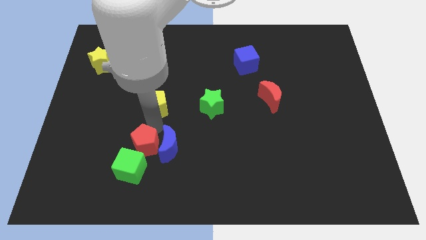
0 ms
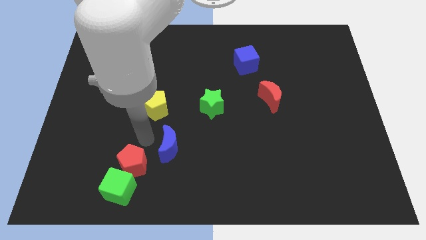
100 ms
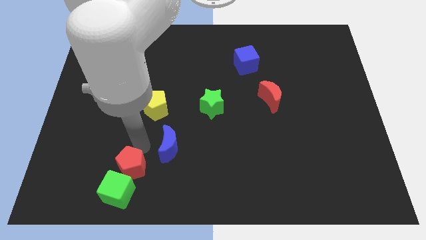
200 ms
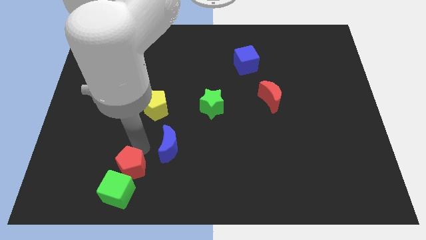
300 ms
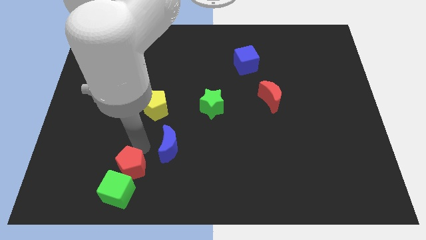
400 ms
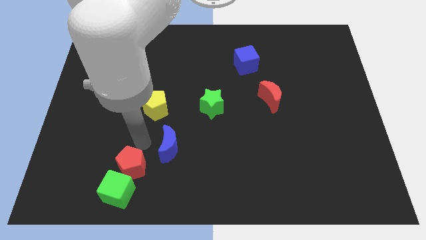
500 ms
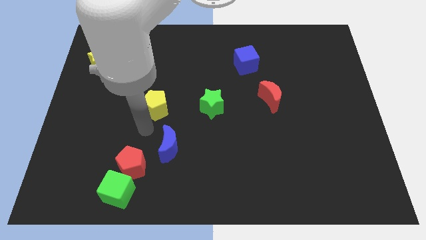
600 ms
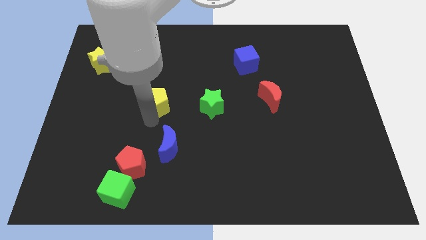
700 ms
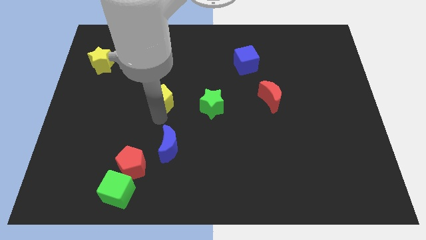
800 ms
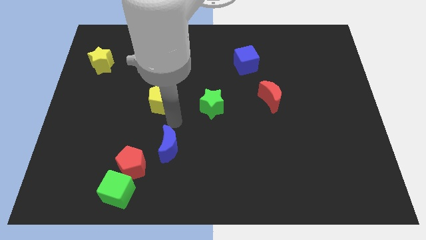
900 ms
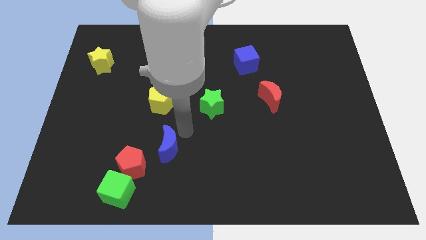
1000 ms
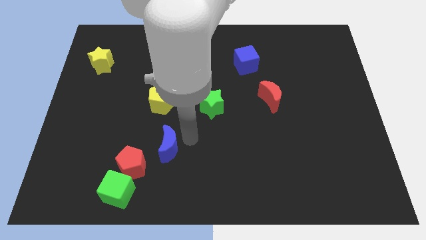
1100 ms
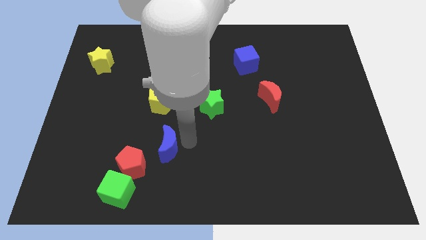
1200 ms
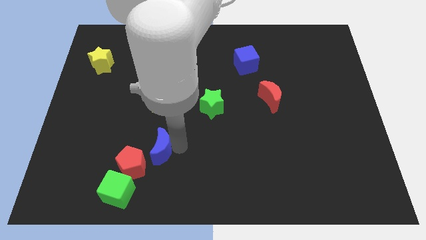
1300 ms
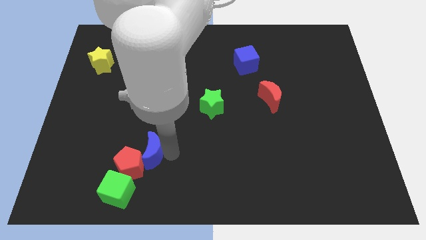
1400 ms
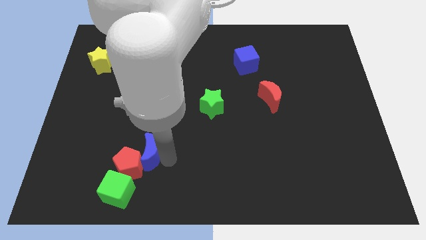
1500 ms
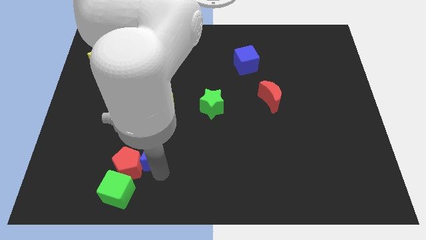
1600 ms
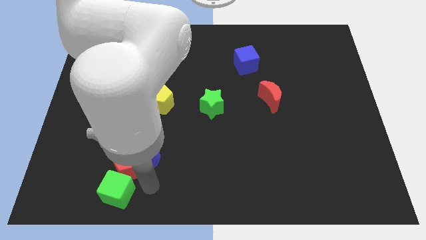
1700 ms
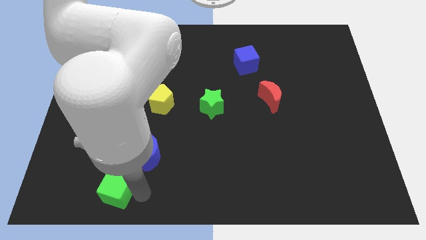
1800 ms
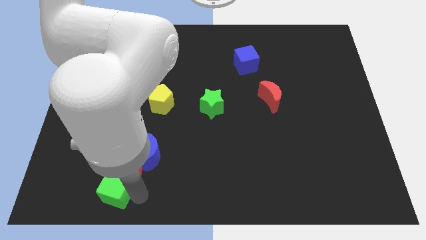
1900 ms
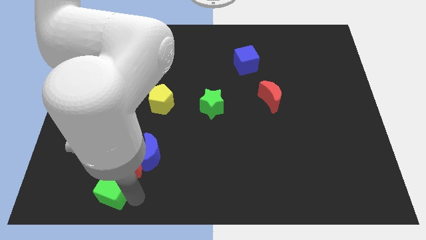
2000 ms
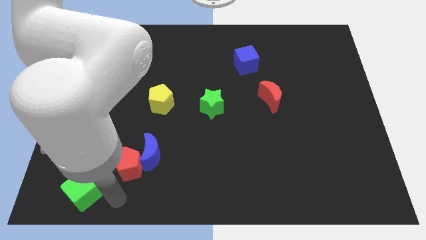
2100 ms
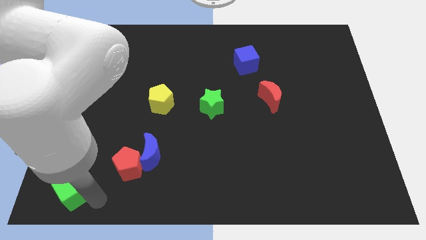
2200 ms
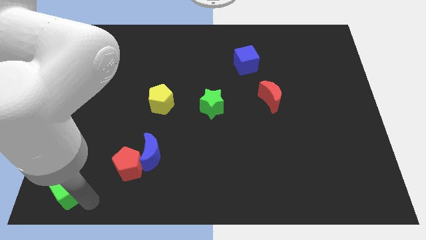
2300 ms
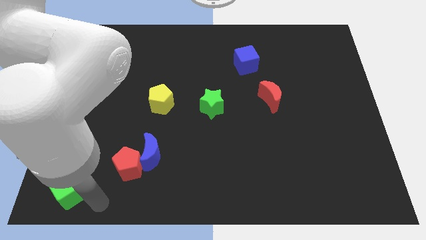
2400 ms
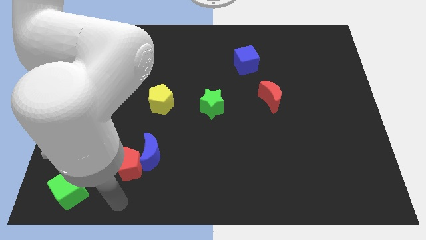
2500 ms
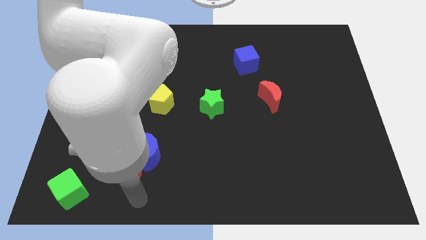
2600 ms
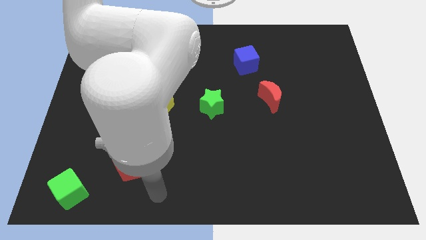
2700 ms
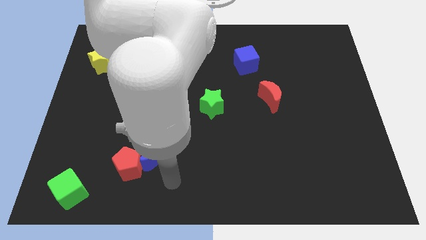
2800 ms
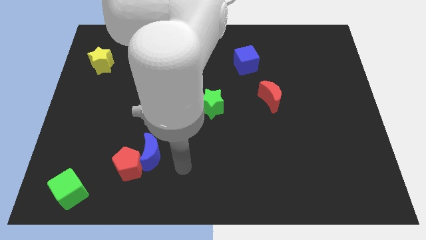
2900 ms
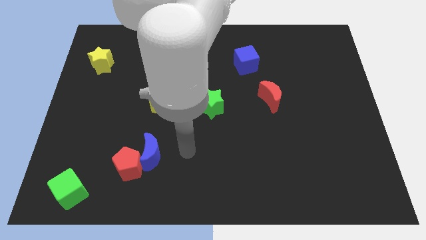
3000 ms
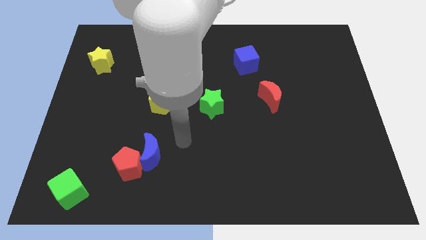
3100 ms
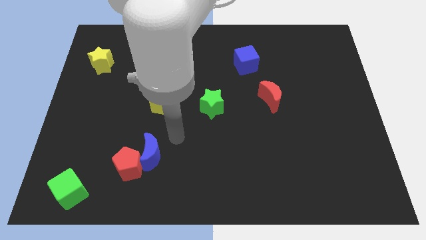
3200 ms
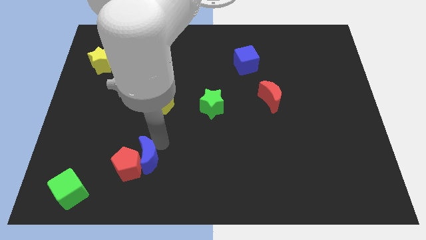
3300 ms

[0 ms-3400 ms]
push the green cube towards the bottom left of the board

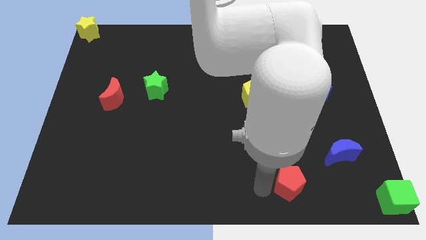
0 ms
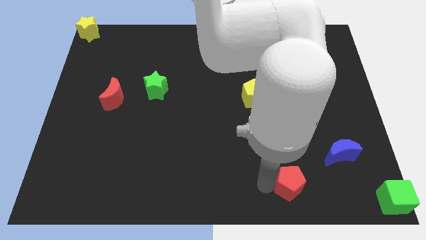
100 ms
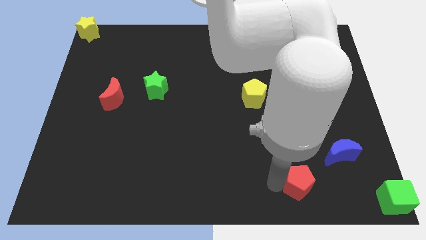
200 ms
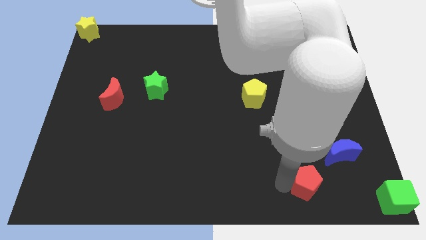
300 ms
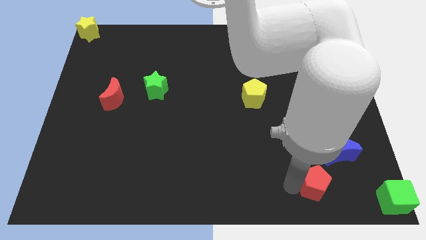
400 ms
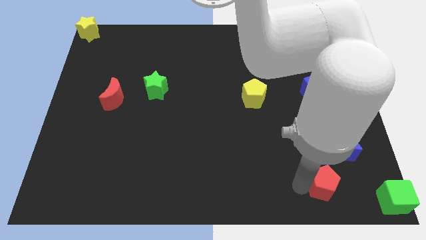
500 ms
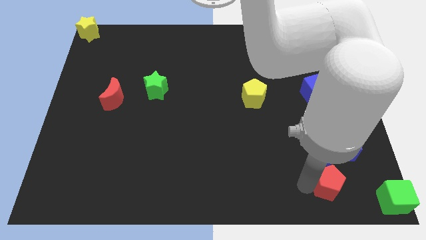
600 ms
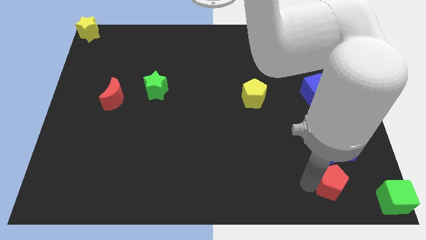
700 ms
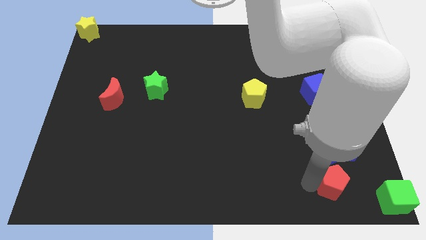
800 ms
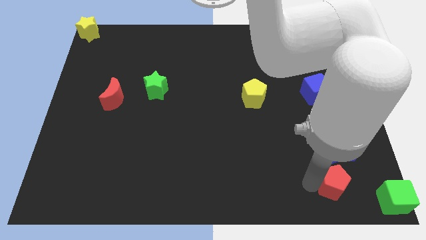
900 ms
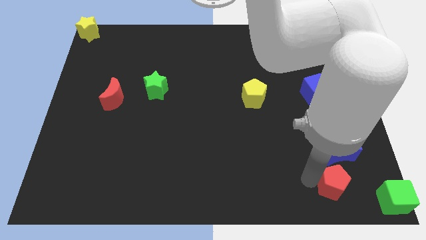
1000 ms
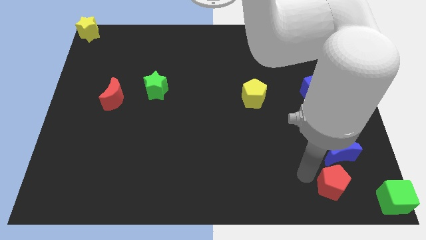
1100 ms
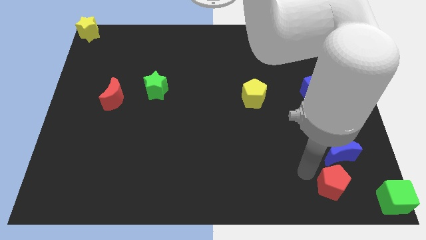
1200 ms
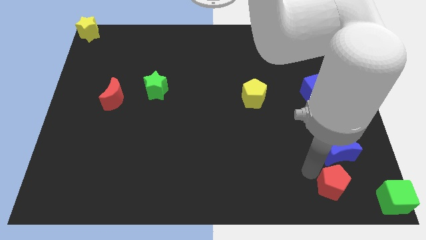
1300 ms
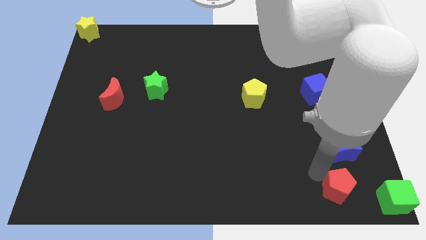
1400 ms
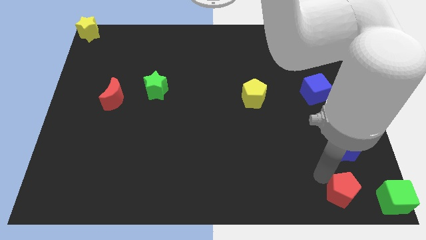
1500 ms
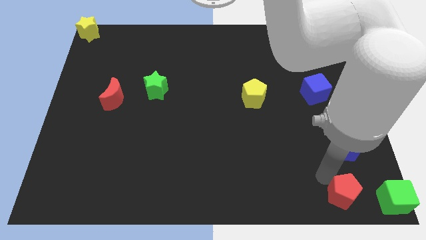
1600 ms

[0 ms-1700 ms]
place the red pentagon below the blue moon

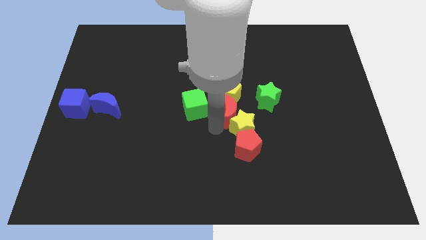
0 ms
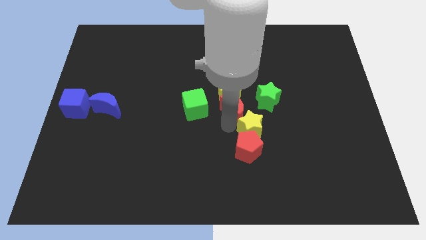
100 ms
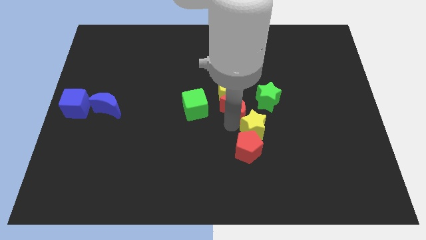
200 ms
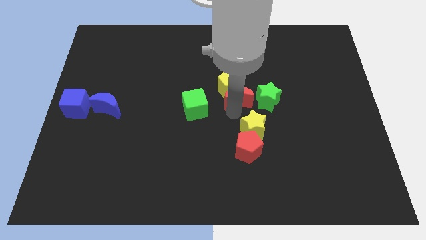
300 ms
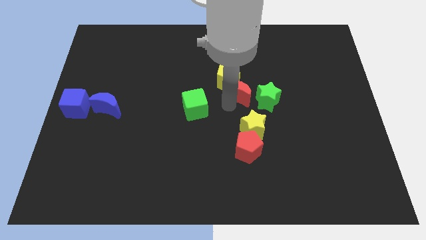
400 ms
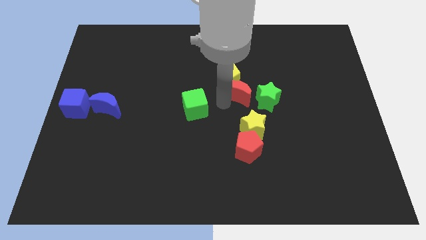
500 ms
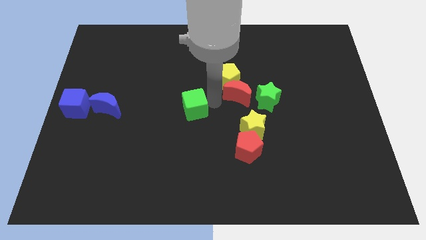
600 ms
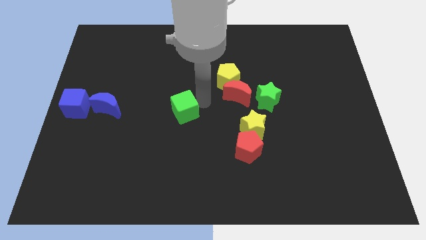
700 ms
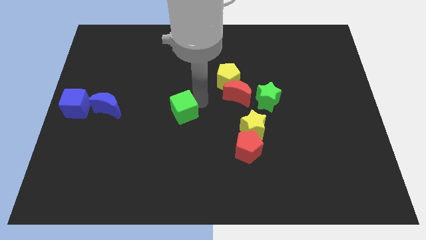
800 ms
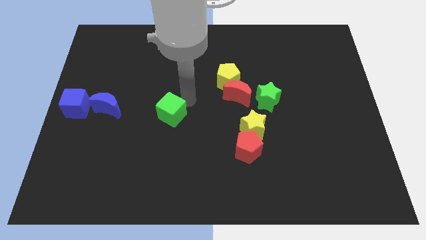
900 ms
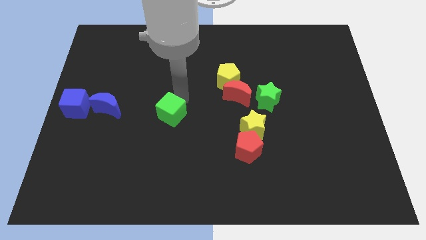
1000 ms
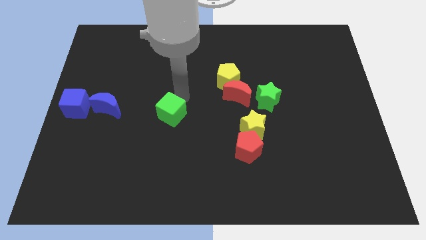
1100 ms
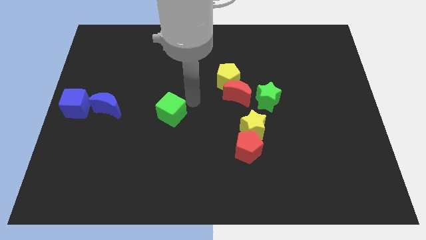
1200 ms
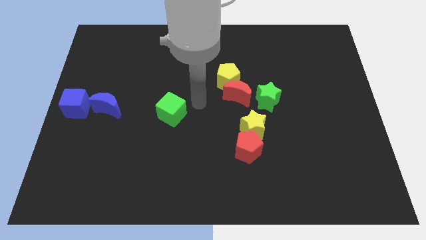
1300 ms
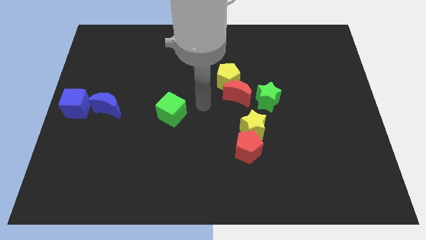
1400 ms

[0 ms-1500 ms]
place the green cube horizontally to the right side of the blue crescent

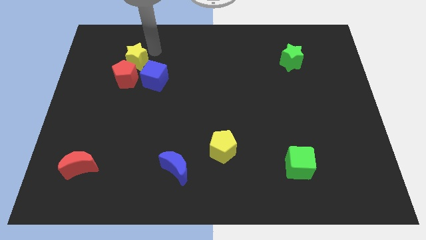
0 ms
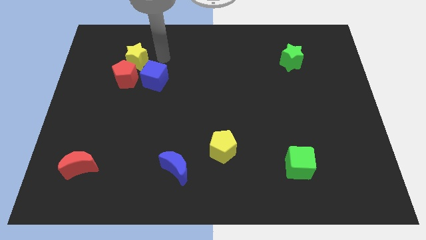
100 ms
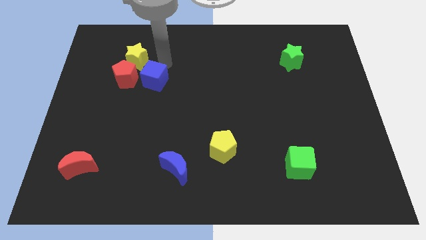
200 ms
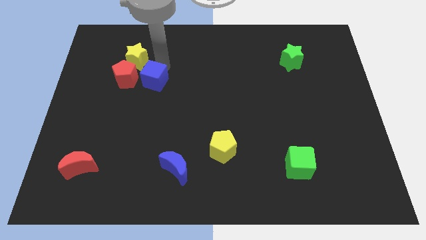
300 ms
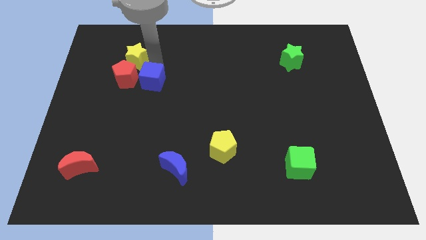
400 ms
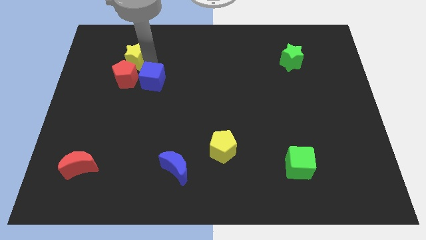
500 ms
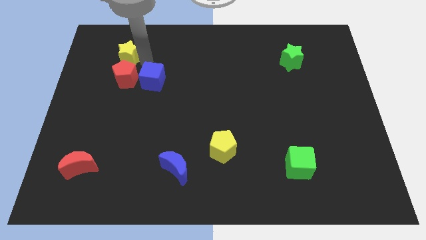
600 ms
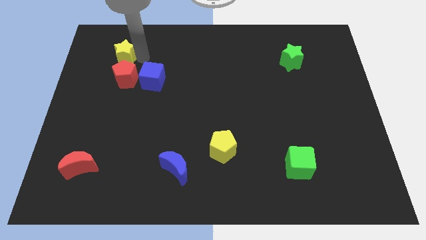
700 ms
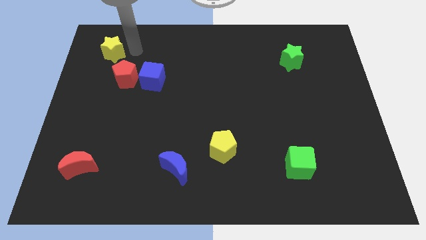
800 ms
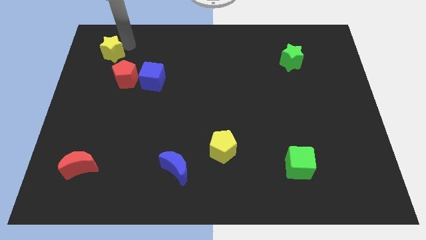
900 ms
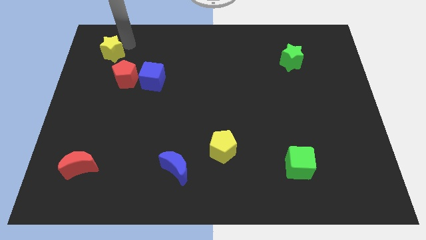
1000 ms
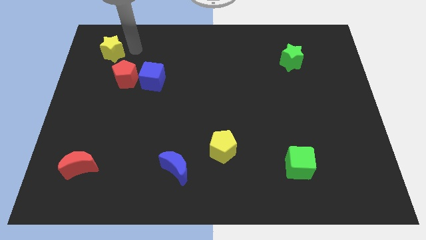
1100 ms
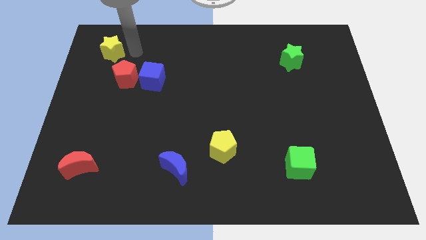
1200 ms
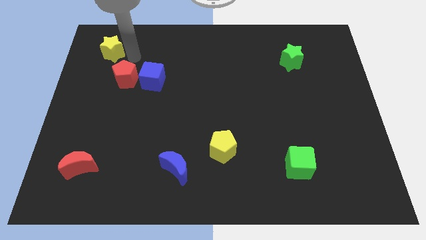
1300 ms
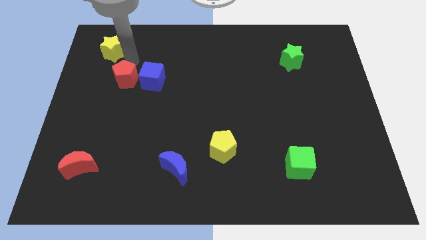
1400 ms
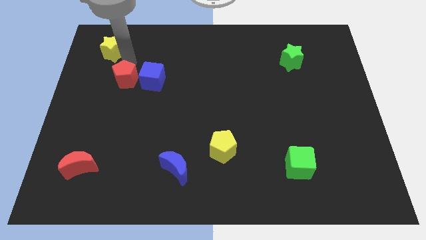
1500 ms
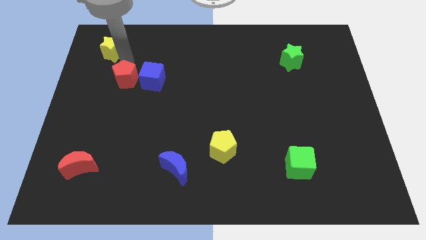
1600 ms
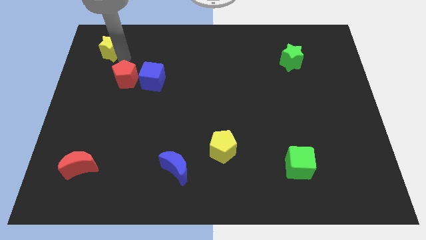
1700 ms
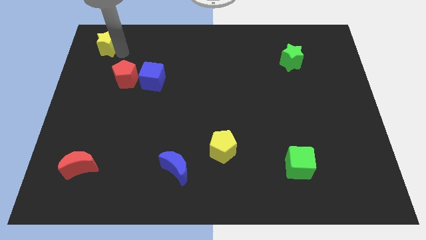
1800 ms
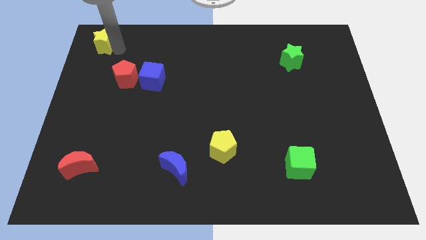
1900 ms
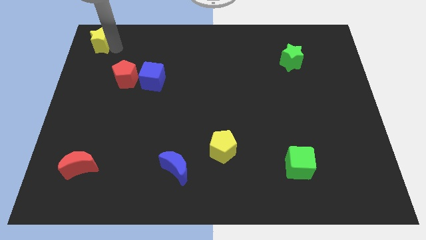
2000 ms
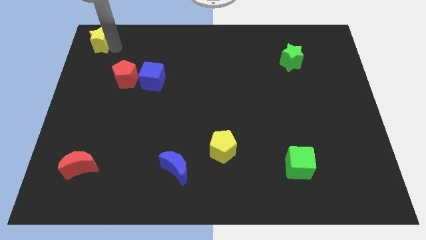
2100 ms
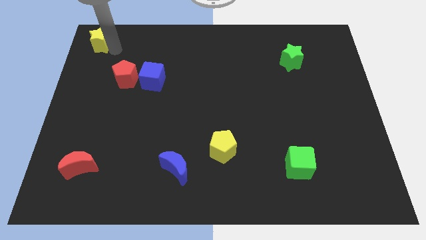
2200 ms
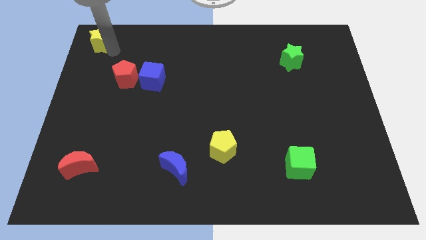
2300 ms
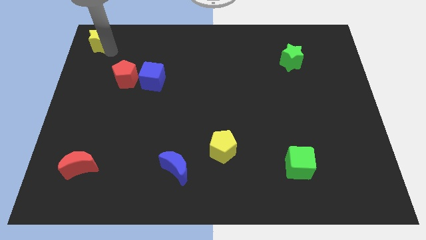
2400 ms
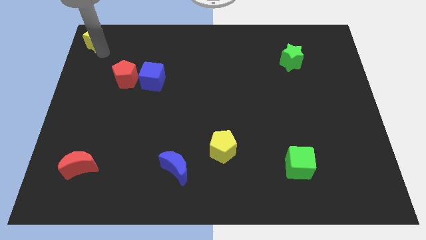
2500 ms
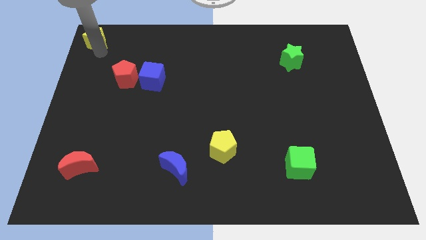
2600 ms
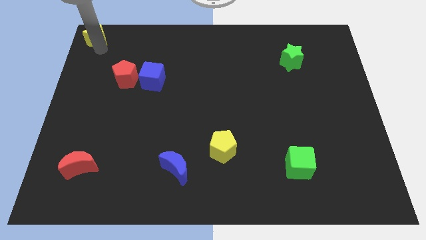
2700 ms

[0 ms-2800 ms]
push the yellow star slightly to the top left side of the board
